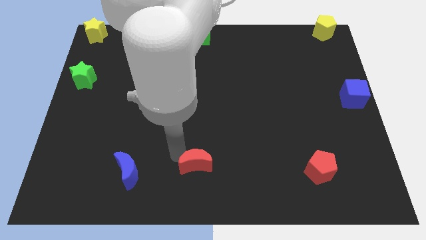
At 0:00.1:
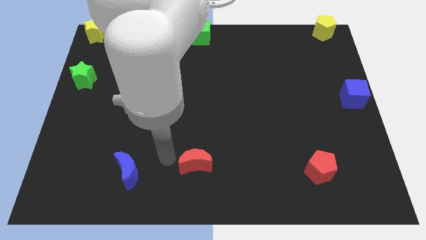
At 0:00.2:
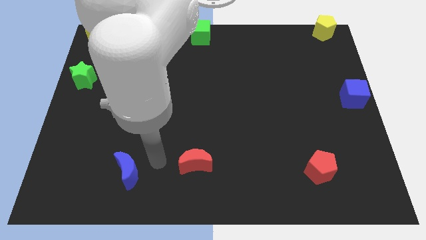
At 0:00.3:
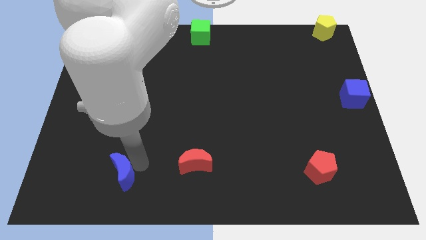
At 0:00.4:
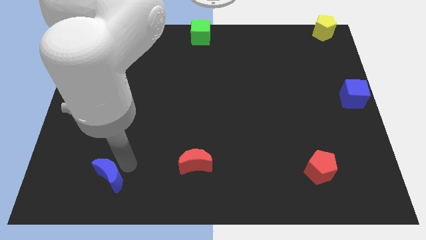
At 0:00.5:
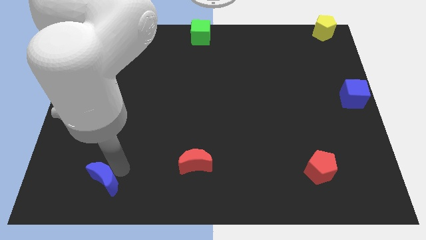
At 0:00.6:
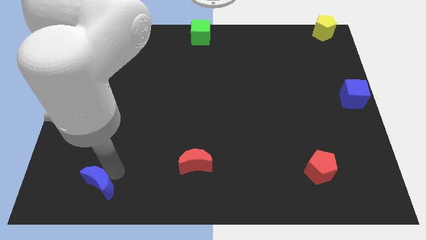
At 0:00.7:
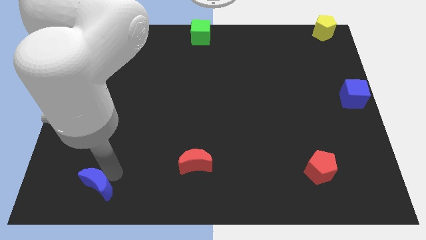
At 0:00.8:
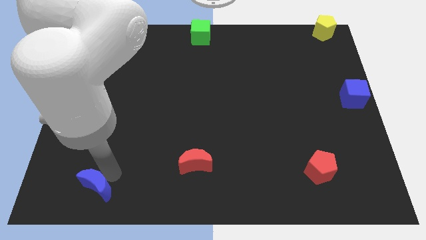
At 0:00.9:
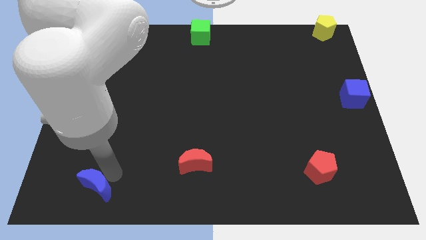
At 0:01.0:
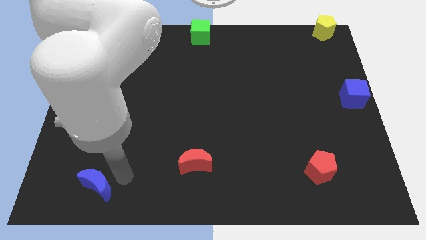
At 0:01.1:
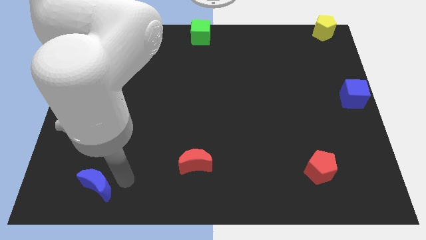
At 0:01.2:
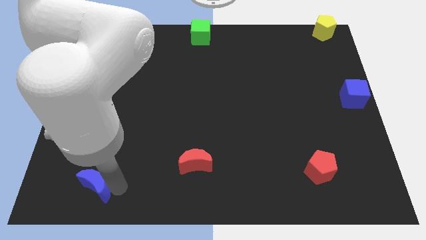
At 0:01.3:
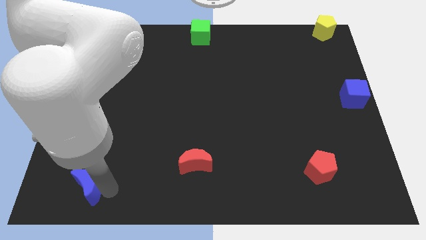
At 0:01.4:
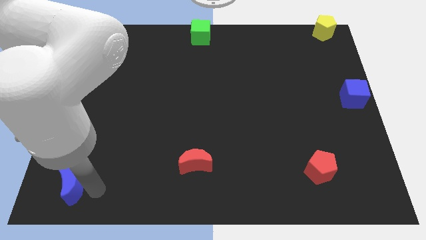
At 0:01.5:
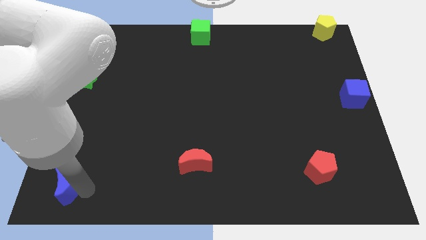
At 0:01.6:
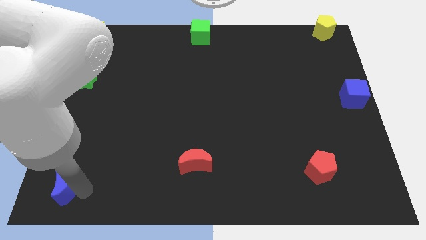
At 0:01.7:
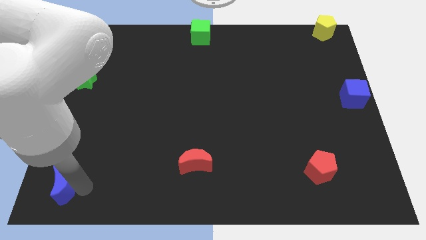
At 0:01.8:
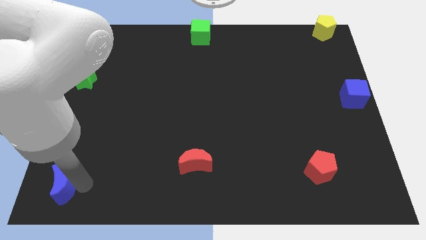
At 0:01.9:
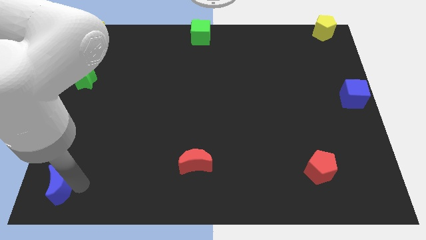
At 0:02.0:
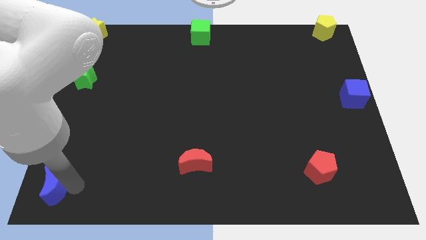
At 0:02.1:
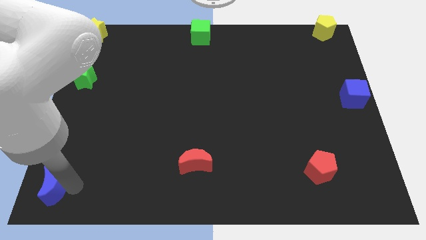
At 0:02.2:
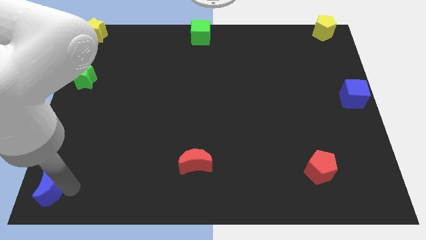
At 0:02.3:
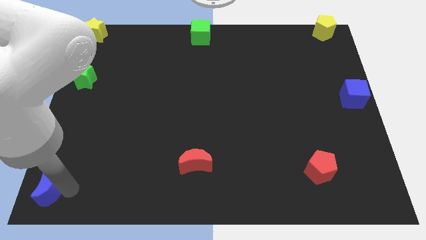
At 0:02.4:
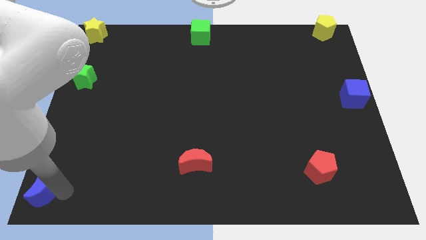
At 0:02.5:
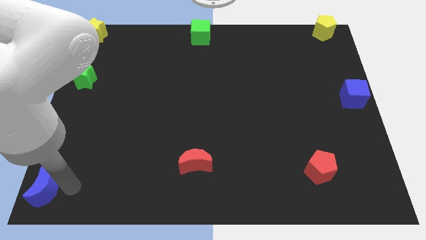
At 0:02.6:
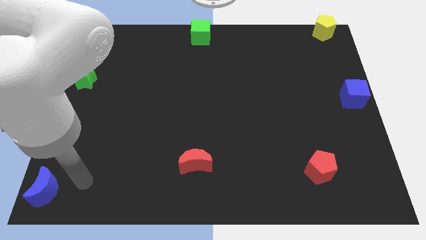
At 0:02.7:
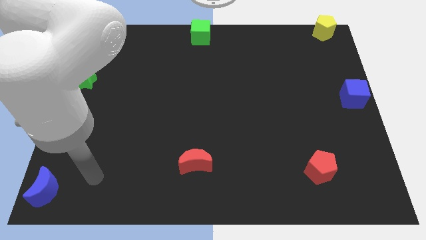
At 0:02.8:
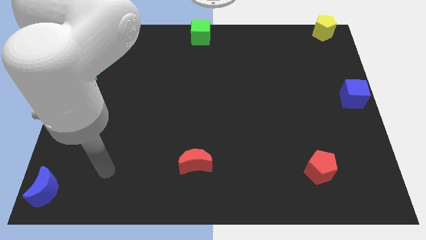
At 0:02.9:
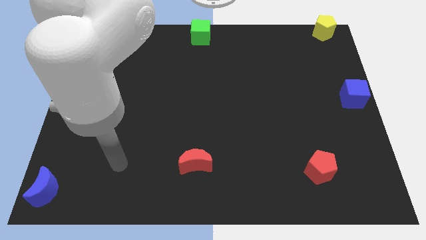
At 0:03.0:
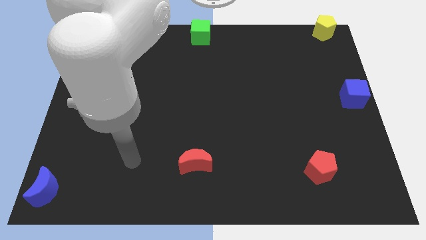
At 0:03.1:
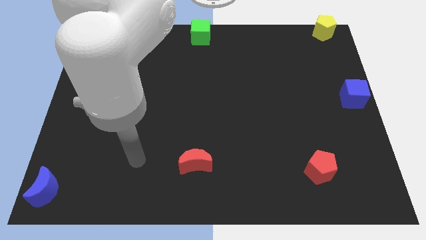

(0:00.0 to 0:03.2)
place the blue crescent towards the bottom left corner

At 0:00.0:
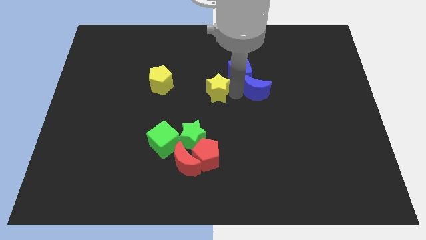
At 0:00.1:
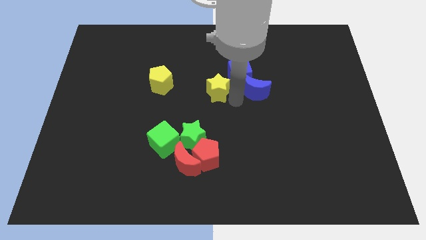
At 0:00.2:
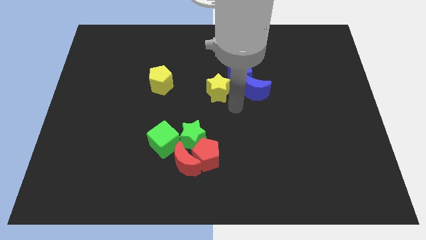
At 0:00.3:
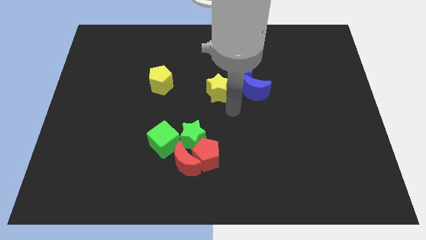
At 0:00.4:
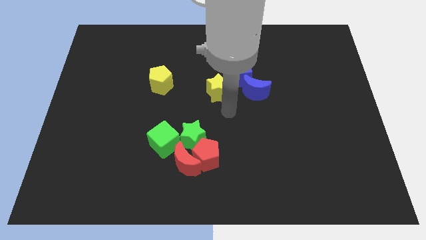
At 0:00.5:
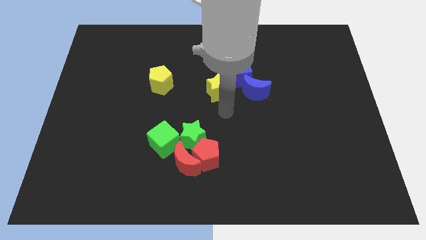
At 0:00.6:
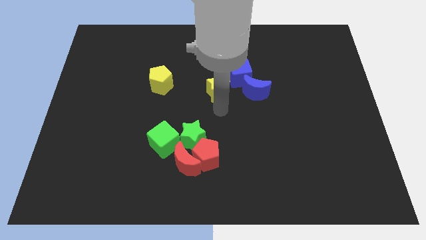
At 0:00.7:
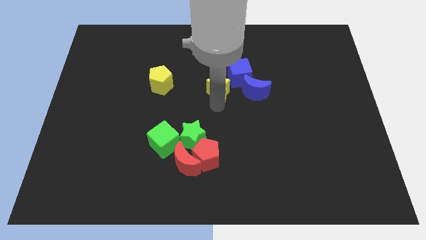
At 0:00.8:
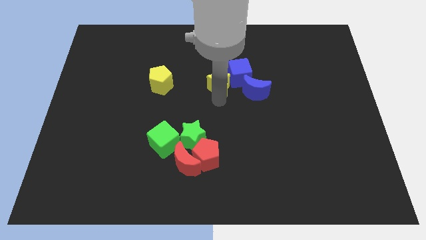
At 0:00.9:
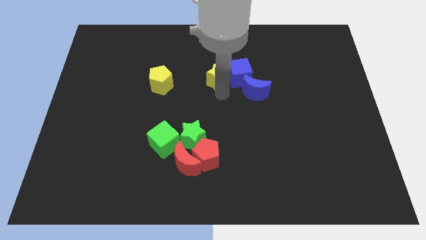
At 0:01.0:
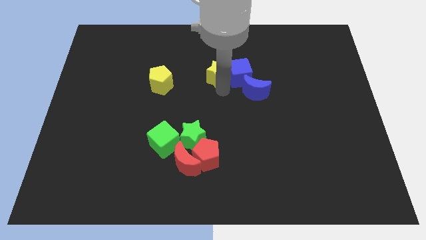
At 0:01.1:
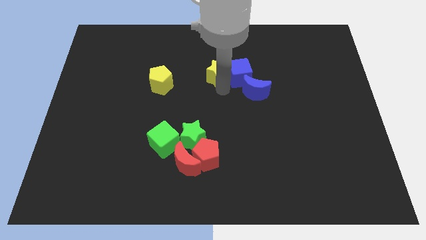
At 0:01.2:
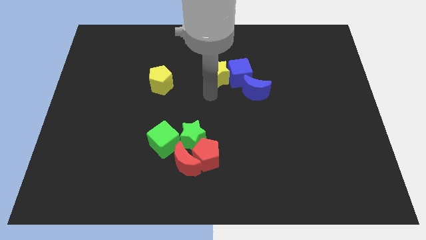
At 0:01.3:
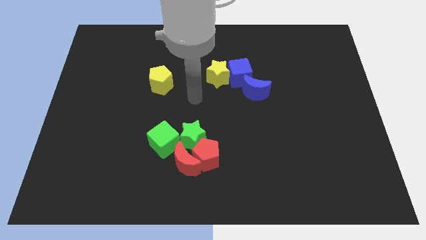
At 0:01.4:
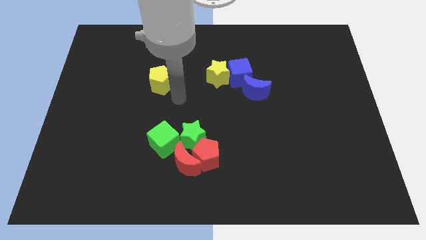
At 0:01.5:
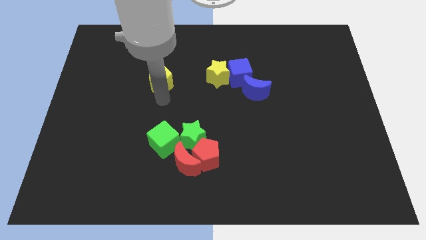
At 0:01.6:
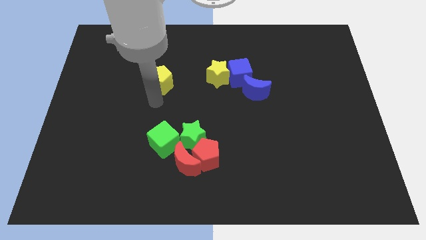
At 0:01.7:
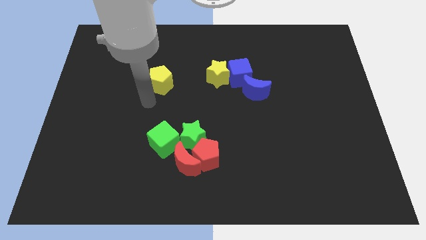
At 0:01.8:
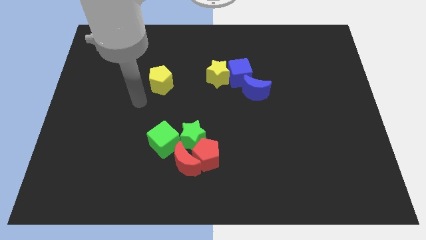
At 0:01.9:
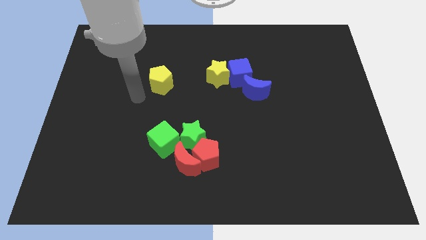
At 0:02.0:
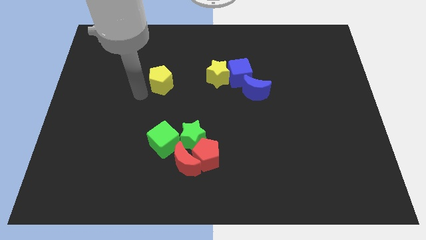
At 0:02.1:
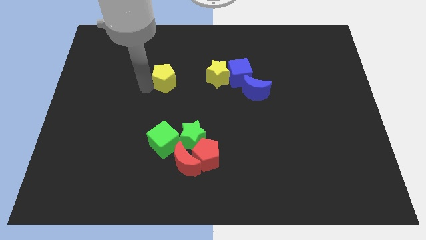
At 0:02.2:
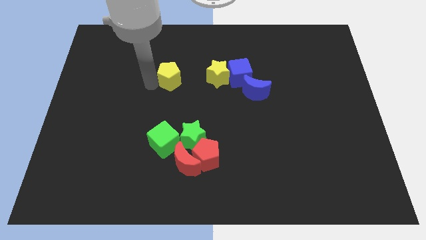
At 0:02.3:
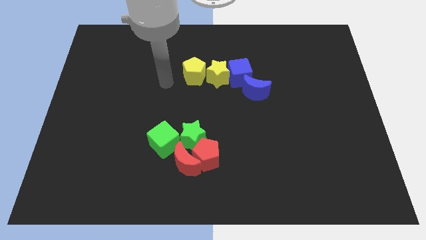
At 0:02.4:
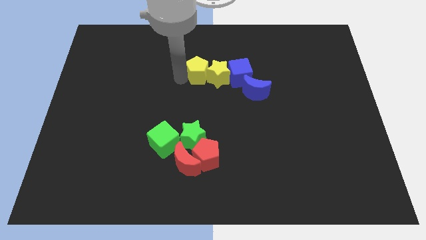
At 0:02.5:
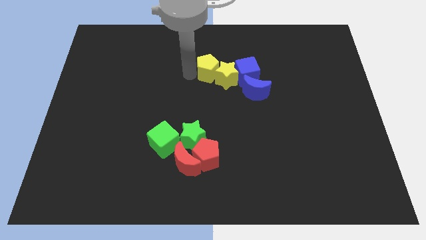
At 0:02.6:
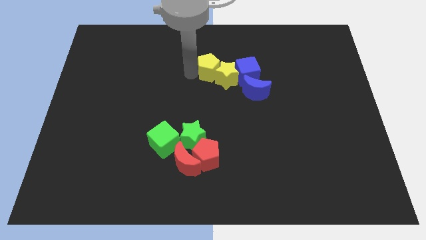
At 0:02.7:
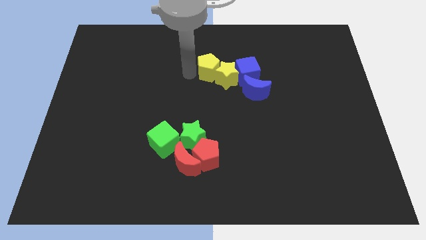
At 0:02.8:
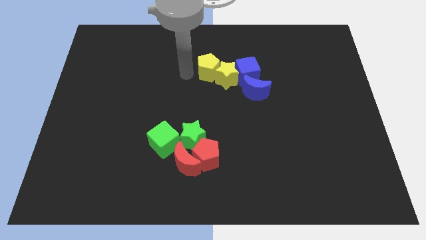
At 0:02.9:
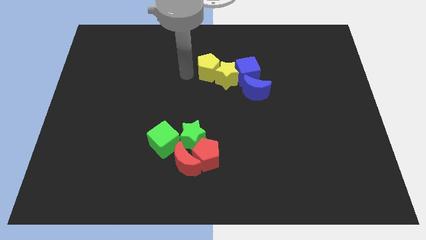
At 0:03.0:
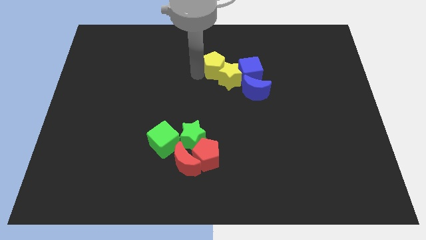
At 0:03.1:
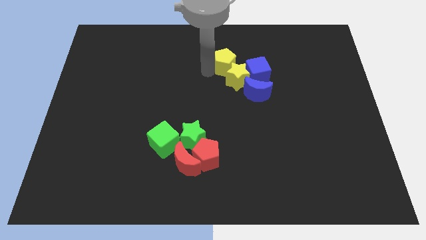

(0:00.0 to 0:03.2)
push the yellow pentagon slightly to the right

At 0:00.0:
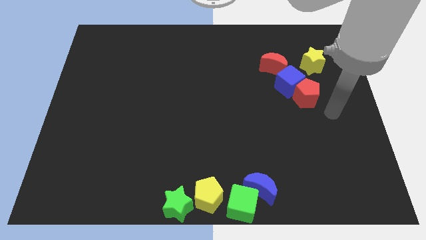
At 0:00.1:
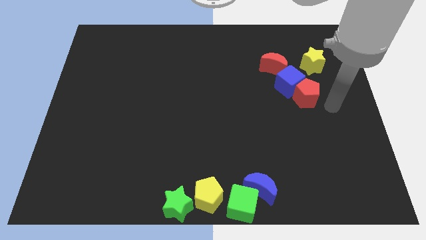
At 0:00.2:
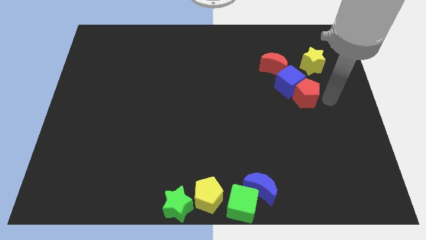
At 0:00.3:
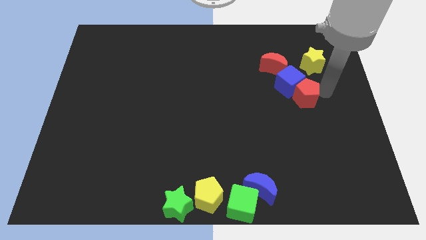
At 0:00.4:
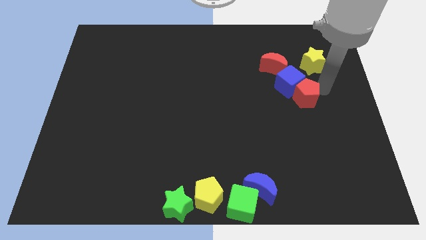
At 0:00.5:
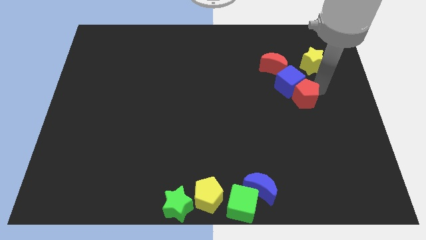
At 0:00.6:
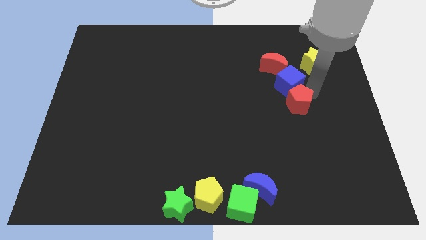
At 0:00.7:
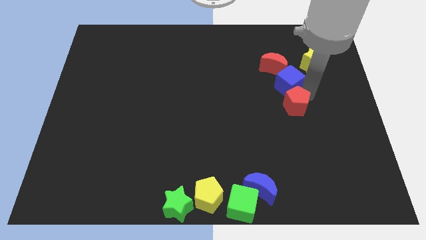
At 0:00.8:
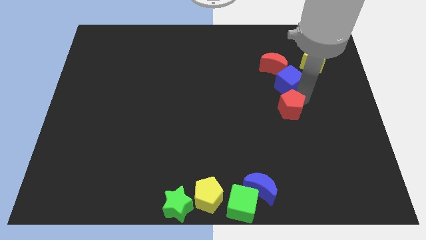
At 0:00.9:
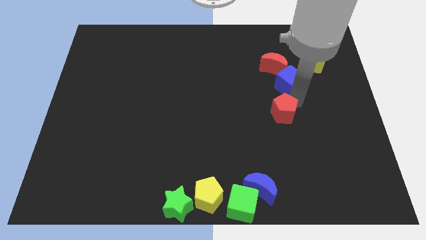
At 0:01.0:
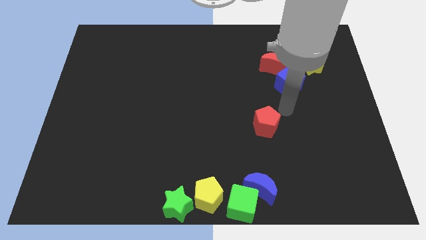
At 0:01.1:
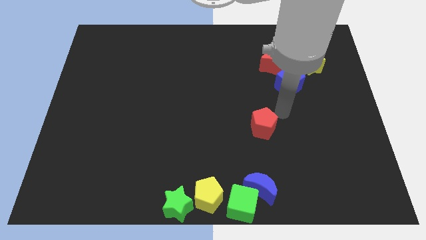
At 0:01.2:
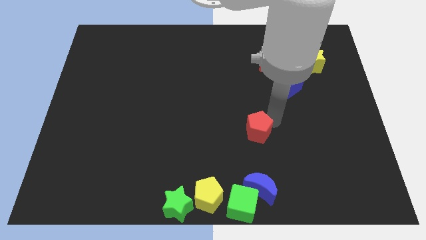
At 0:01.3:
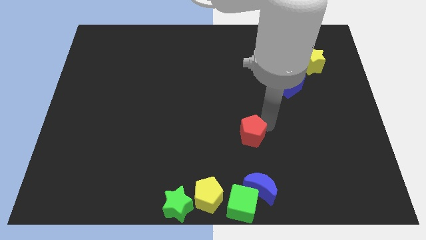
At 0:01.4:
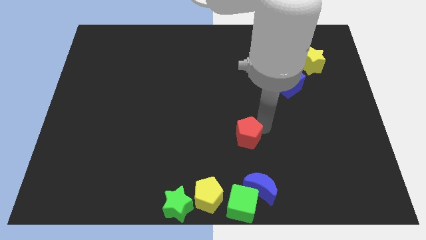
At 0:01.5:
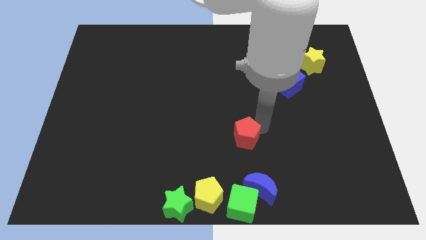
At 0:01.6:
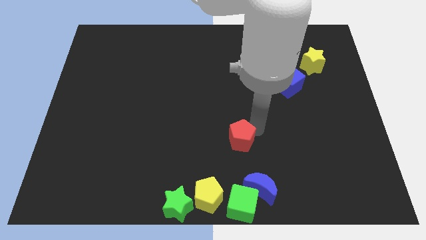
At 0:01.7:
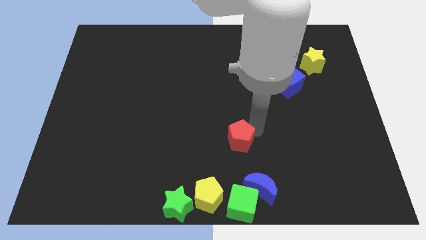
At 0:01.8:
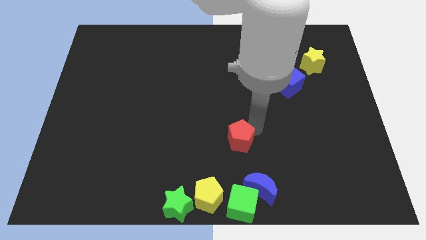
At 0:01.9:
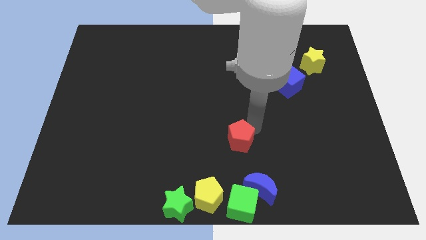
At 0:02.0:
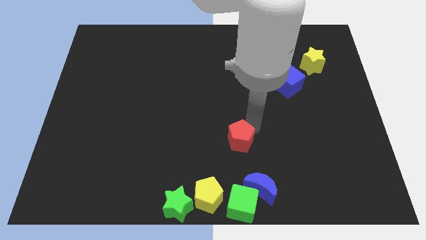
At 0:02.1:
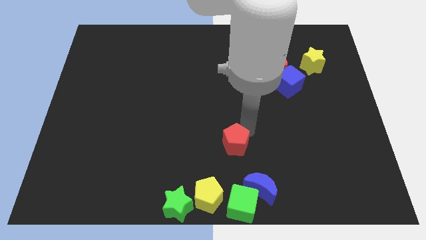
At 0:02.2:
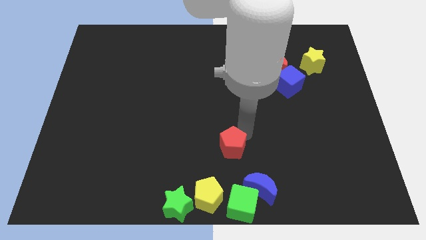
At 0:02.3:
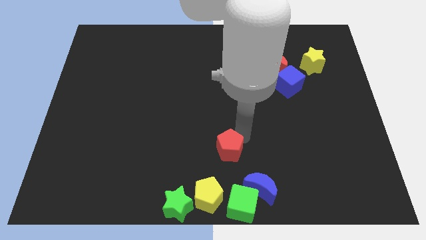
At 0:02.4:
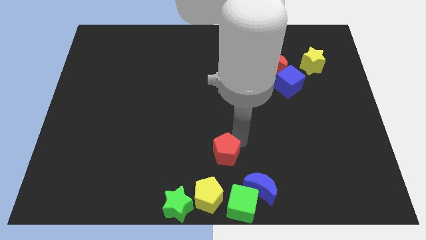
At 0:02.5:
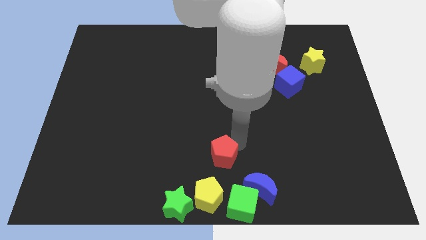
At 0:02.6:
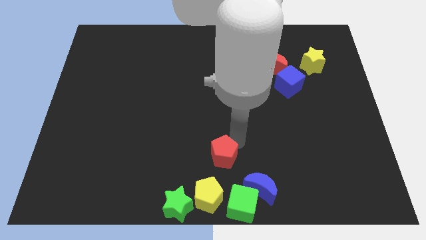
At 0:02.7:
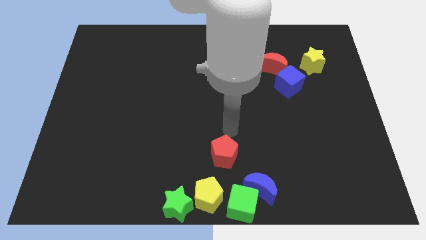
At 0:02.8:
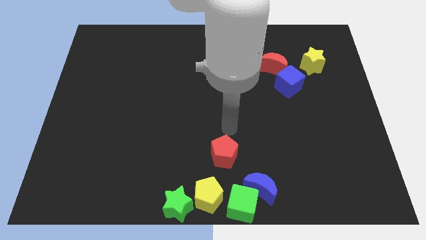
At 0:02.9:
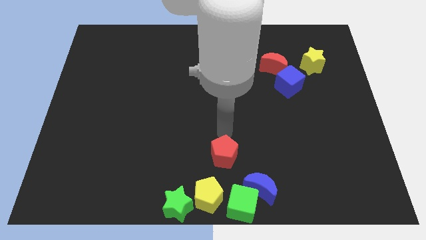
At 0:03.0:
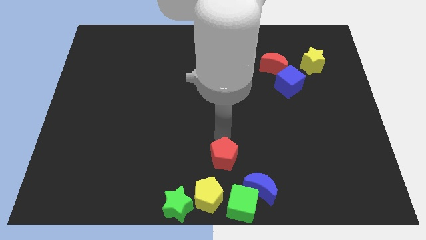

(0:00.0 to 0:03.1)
separate the red pentagon from the blue cube
